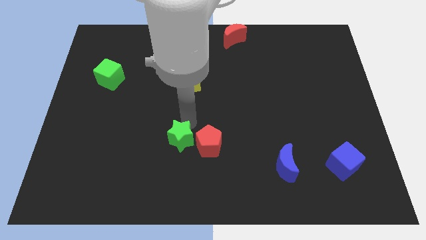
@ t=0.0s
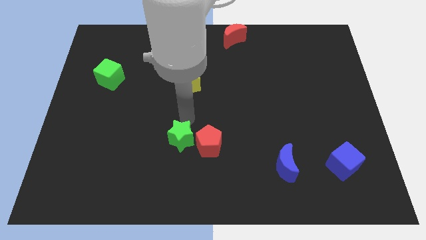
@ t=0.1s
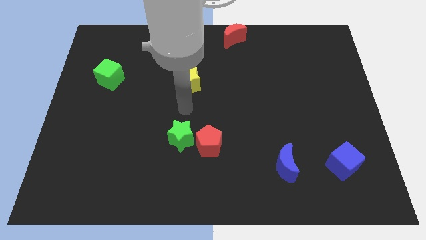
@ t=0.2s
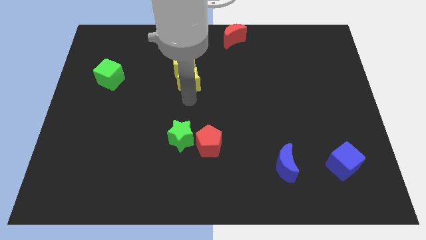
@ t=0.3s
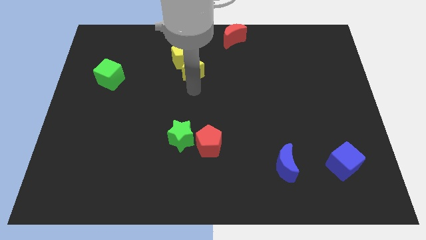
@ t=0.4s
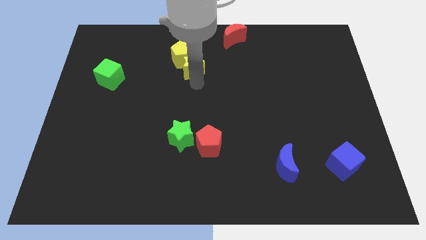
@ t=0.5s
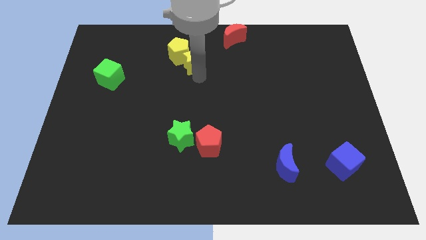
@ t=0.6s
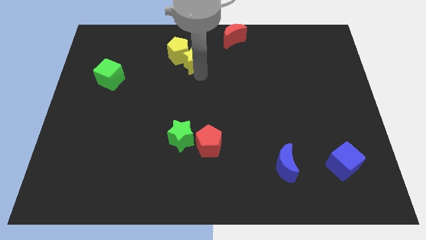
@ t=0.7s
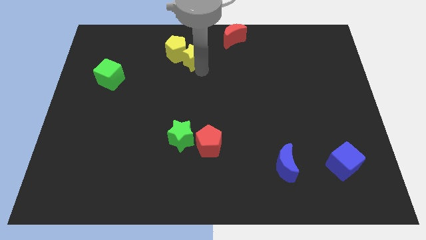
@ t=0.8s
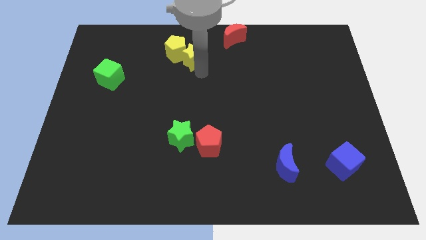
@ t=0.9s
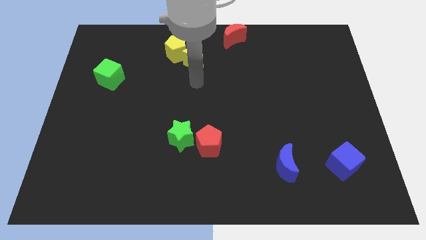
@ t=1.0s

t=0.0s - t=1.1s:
push the yellow blocks towards the top side of the board

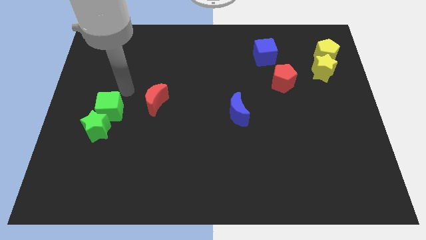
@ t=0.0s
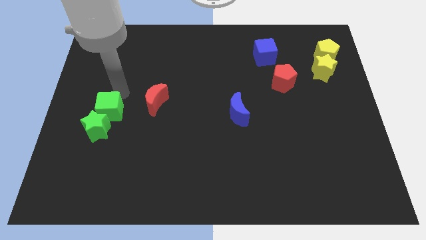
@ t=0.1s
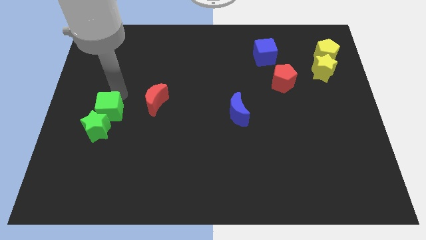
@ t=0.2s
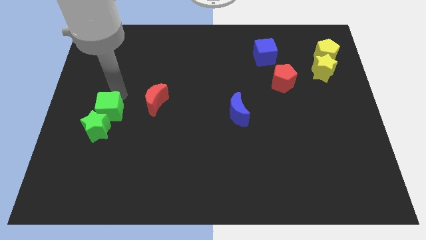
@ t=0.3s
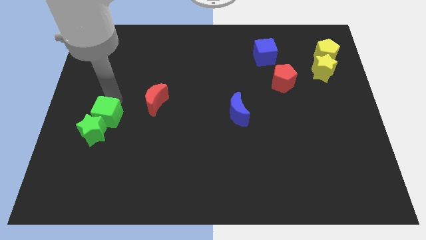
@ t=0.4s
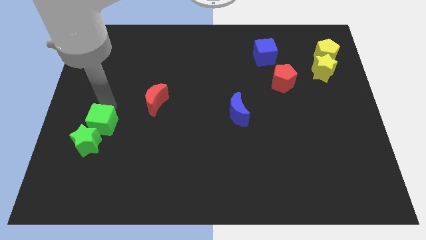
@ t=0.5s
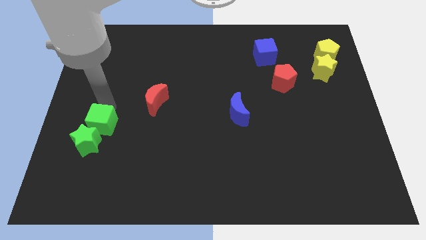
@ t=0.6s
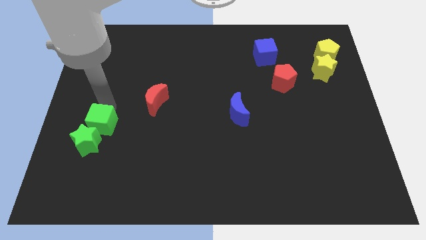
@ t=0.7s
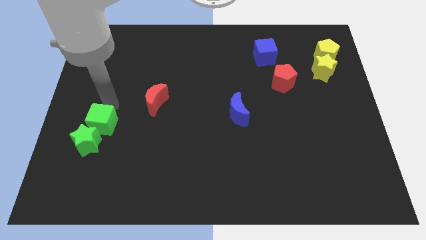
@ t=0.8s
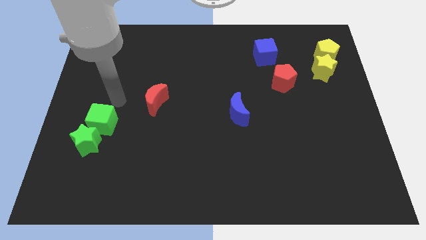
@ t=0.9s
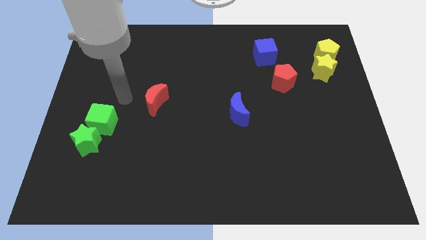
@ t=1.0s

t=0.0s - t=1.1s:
drag the green blocks toward the bottom

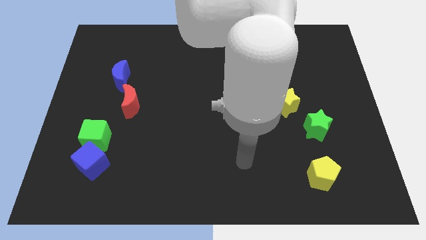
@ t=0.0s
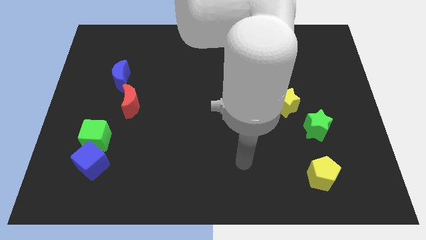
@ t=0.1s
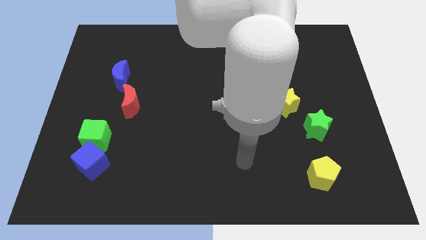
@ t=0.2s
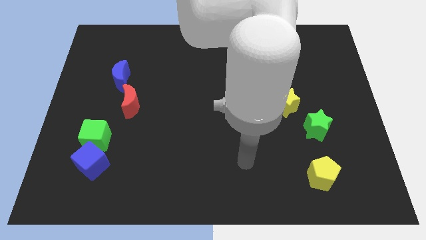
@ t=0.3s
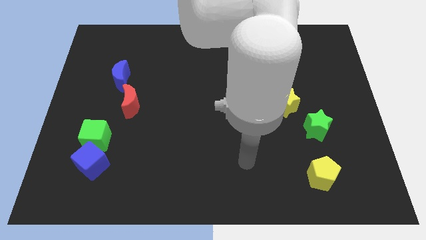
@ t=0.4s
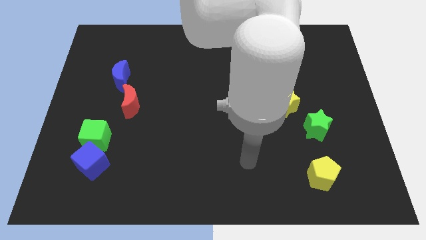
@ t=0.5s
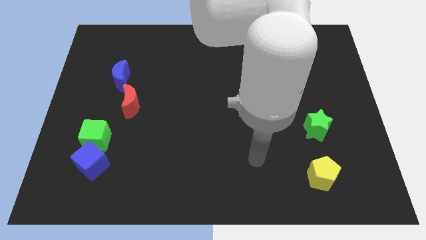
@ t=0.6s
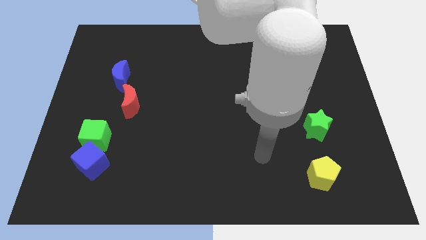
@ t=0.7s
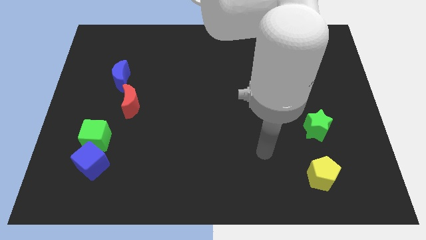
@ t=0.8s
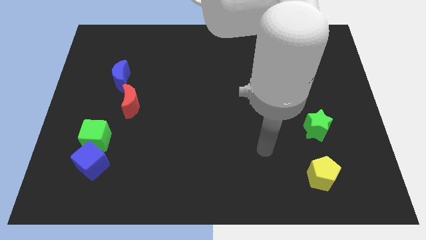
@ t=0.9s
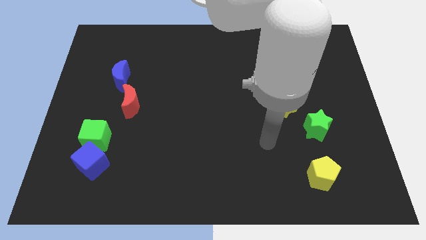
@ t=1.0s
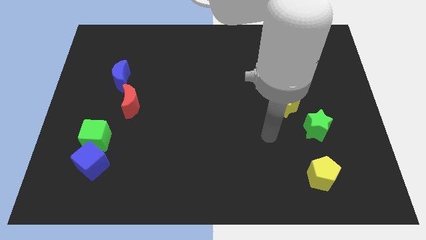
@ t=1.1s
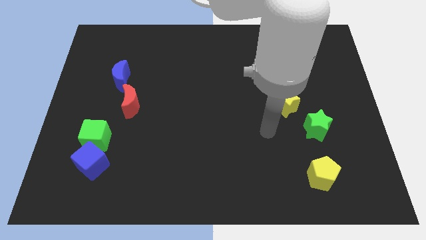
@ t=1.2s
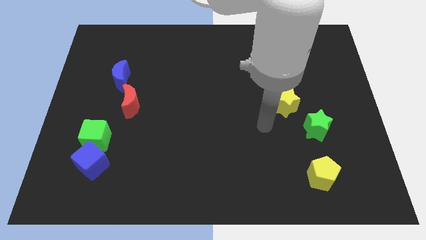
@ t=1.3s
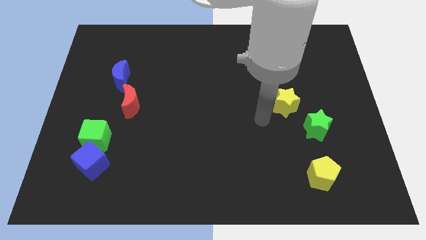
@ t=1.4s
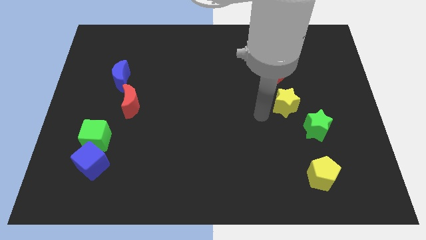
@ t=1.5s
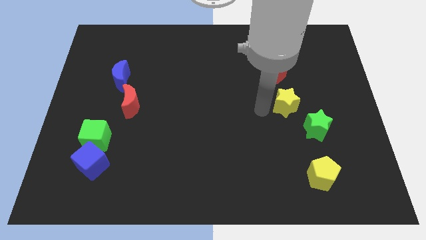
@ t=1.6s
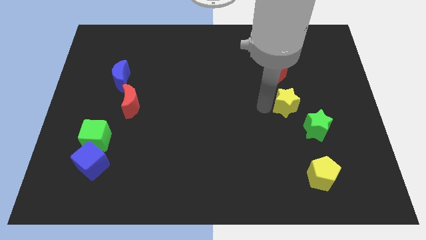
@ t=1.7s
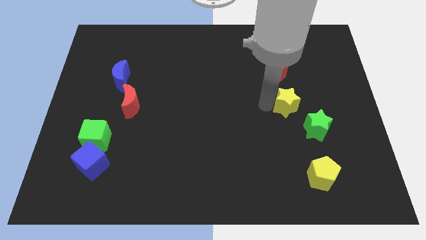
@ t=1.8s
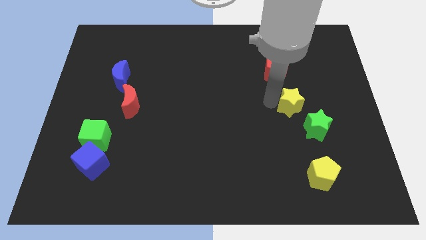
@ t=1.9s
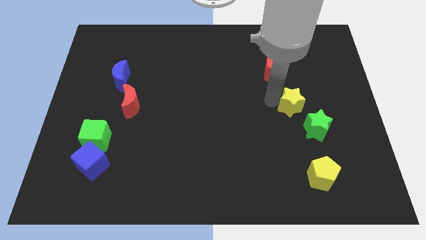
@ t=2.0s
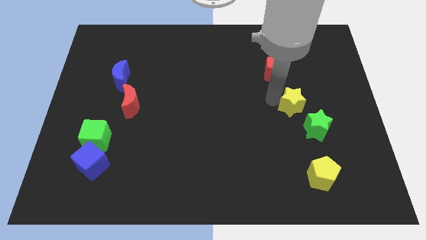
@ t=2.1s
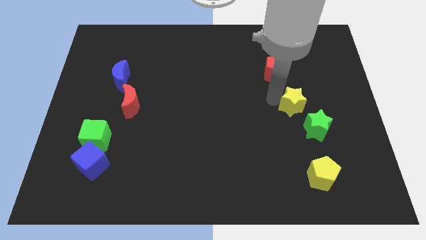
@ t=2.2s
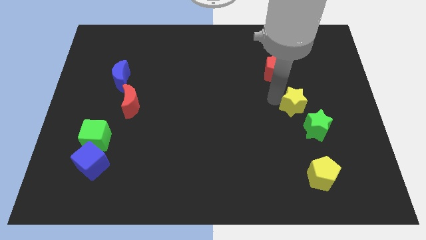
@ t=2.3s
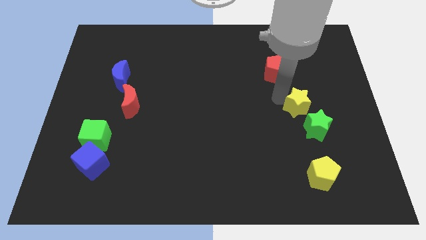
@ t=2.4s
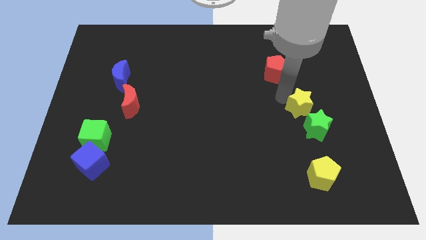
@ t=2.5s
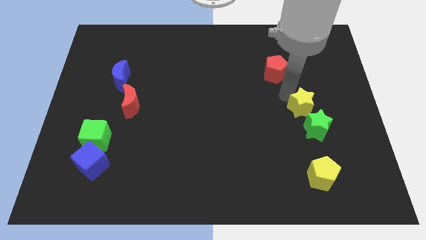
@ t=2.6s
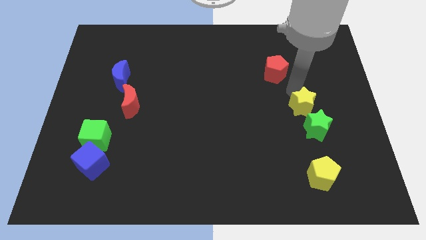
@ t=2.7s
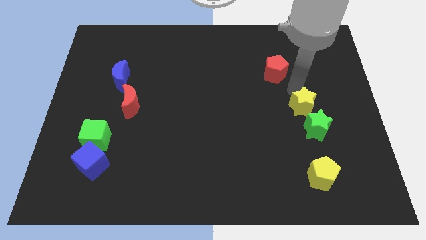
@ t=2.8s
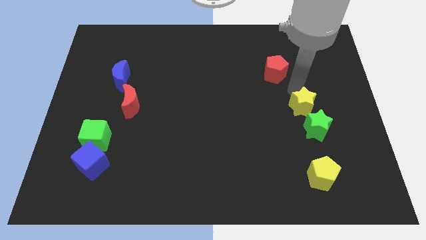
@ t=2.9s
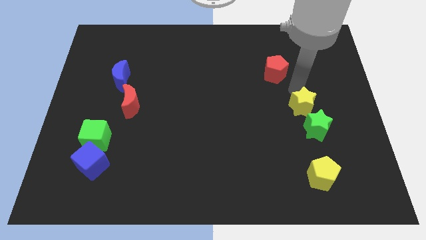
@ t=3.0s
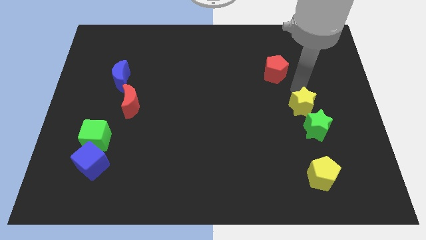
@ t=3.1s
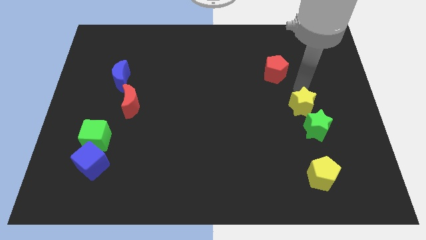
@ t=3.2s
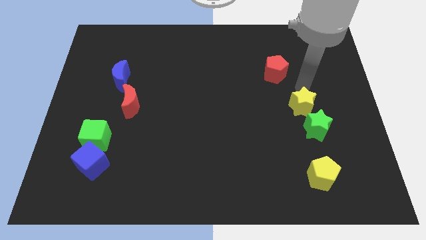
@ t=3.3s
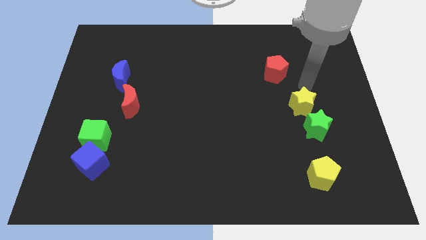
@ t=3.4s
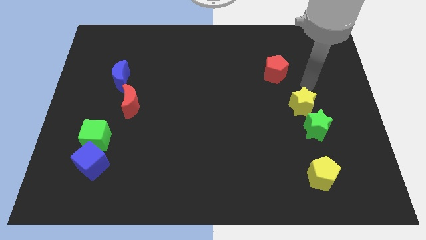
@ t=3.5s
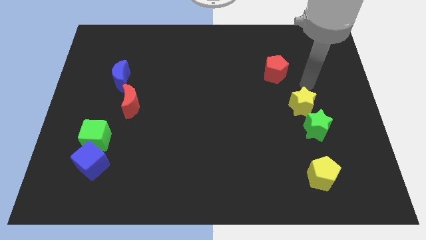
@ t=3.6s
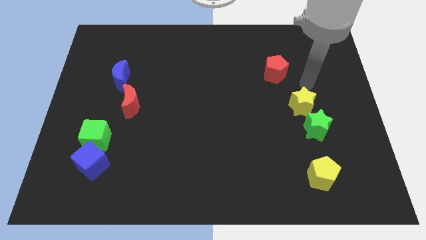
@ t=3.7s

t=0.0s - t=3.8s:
slide the yellow star to the top of the green star

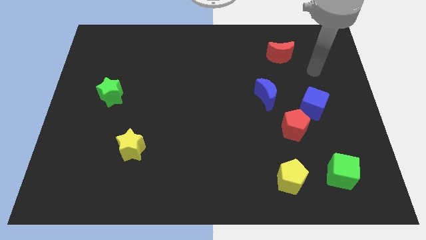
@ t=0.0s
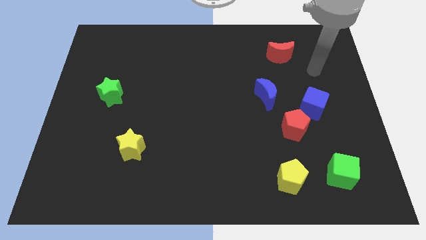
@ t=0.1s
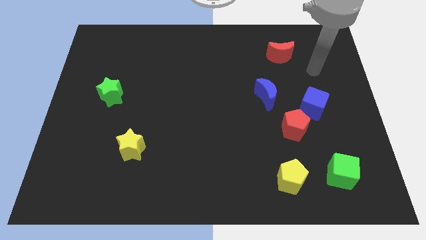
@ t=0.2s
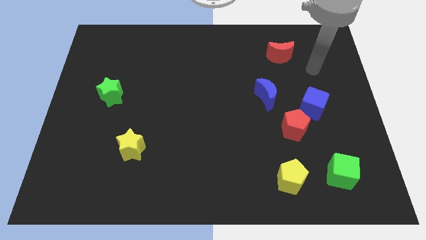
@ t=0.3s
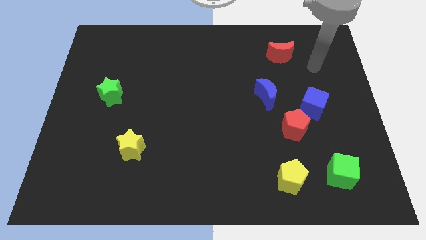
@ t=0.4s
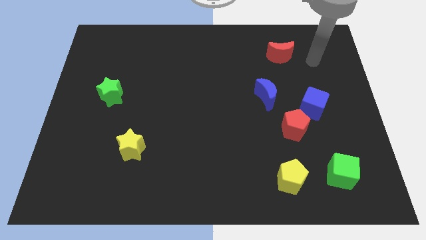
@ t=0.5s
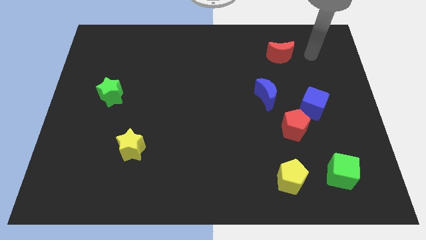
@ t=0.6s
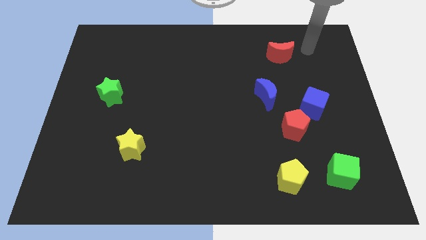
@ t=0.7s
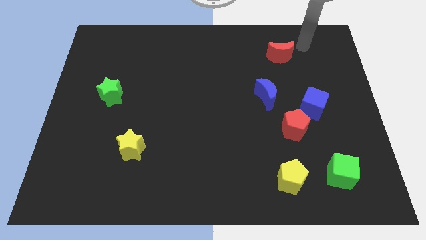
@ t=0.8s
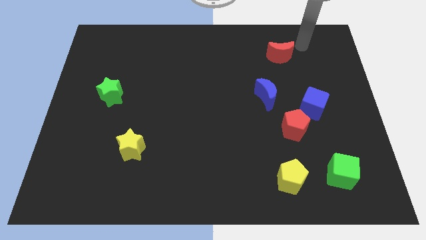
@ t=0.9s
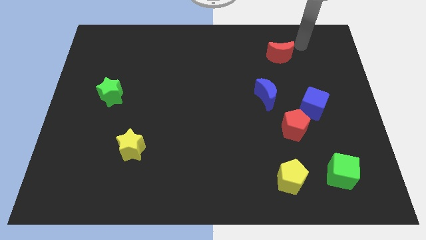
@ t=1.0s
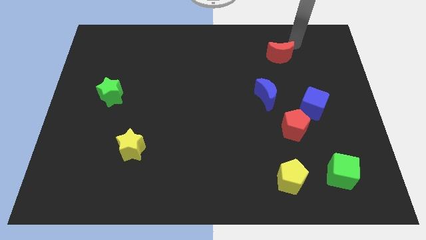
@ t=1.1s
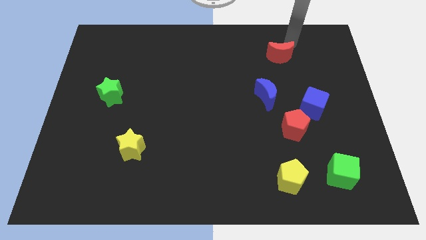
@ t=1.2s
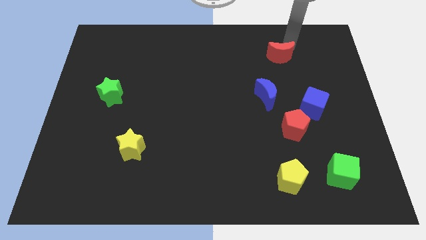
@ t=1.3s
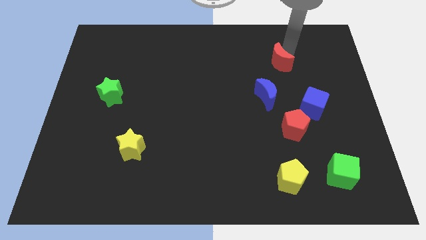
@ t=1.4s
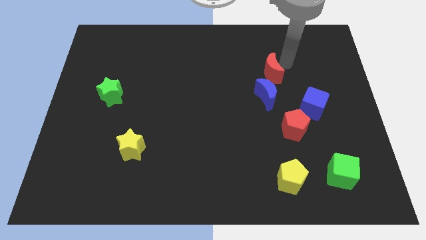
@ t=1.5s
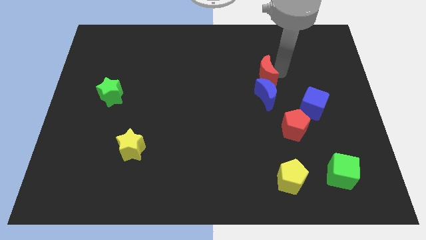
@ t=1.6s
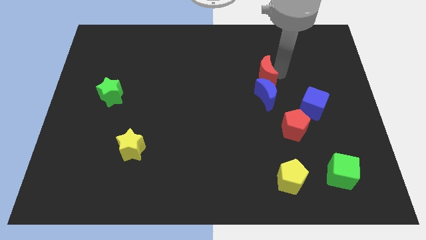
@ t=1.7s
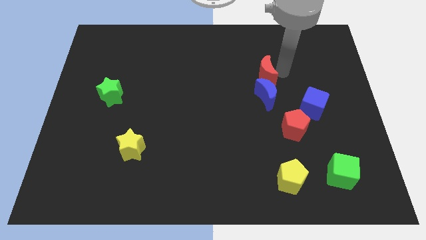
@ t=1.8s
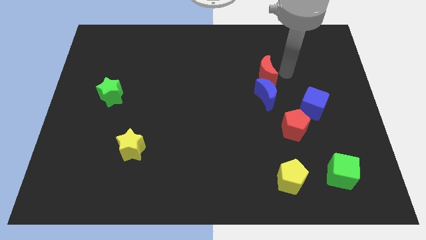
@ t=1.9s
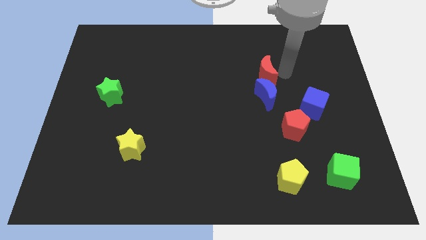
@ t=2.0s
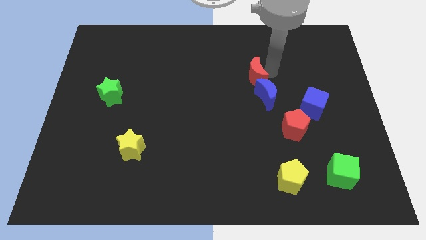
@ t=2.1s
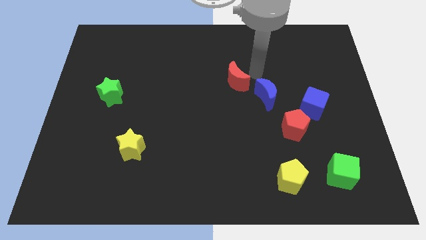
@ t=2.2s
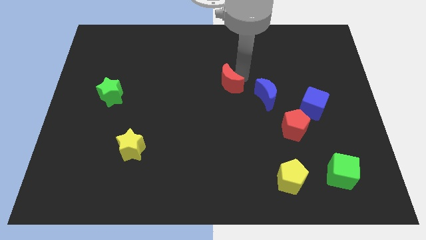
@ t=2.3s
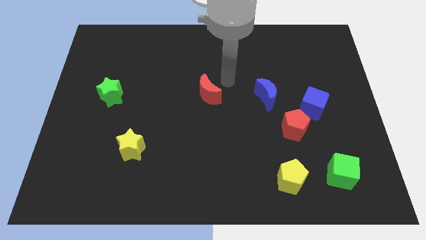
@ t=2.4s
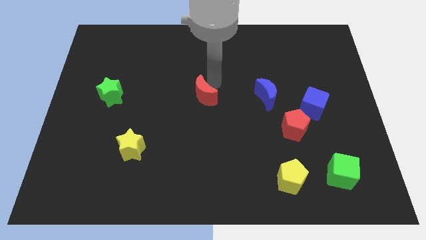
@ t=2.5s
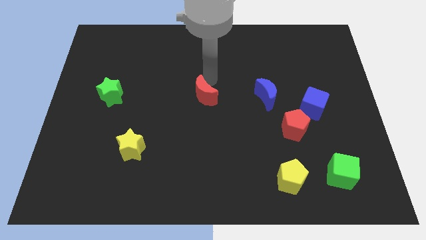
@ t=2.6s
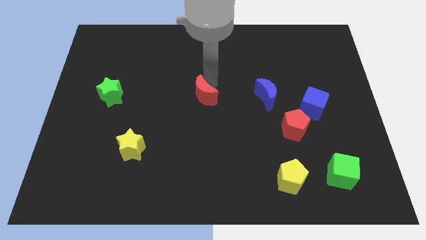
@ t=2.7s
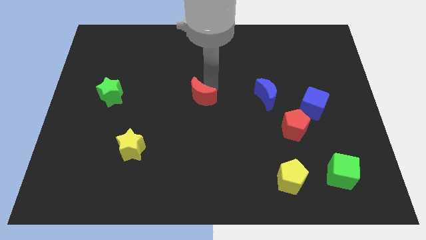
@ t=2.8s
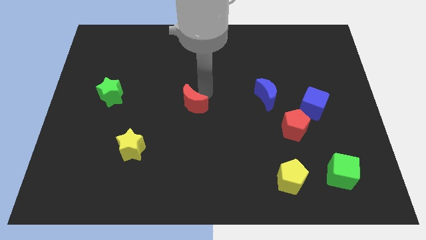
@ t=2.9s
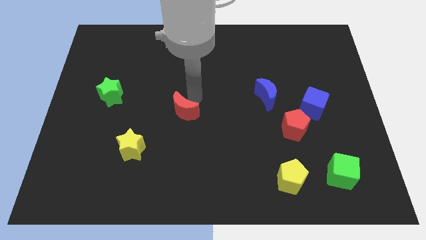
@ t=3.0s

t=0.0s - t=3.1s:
push red crescent to the centre of the board
